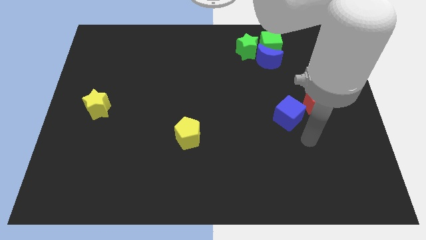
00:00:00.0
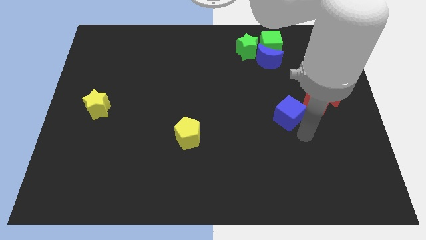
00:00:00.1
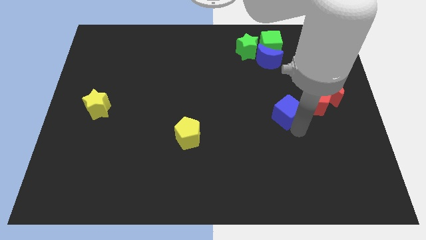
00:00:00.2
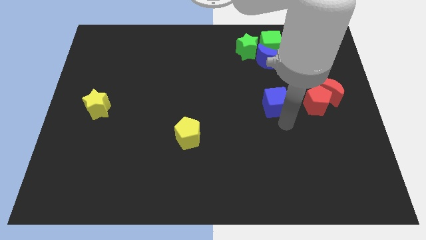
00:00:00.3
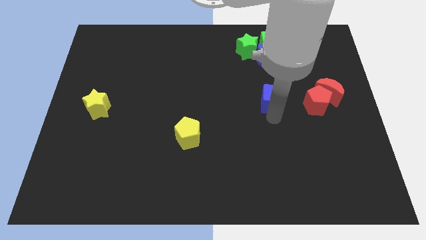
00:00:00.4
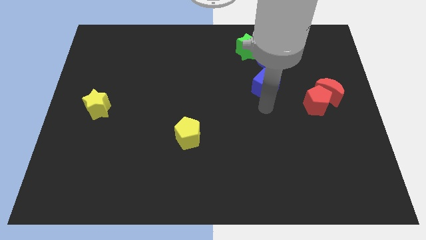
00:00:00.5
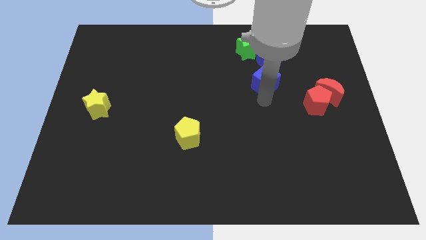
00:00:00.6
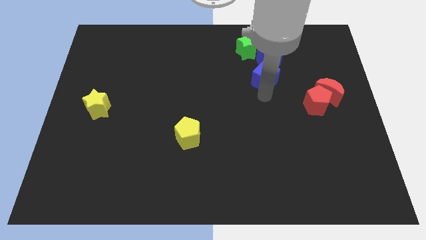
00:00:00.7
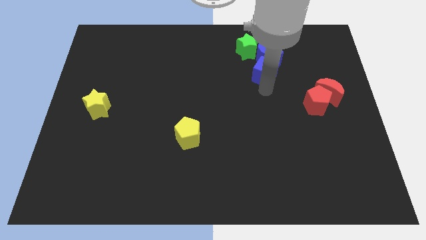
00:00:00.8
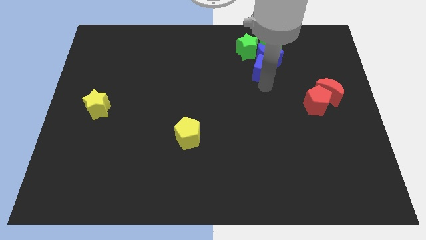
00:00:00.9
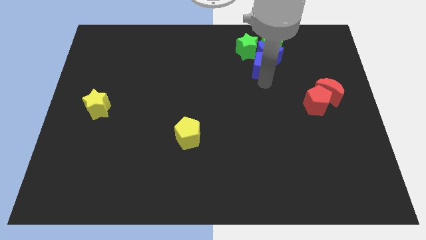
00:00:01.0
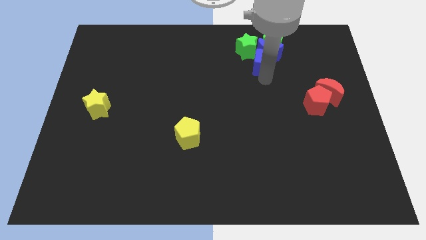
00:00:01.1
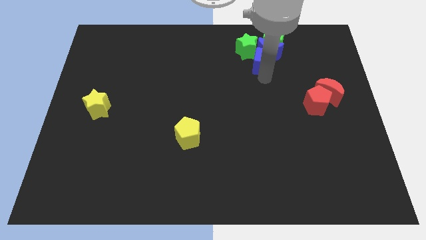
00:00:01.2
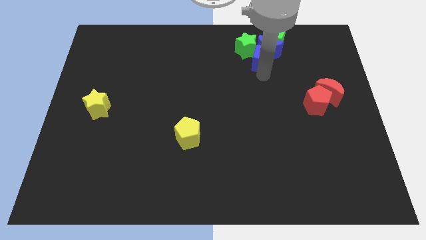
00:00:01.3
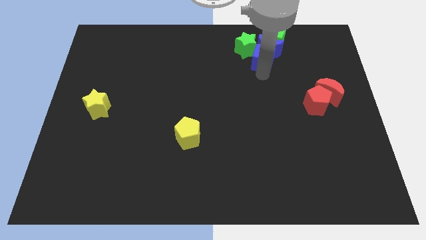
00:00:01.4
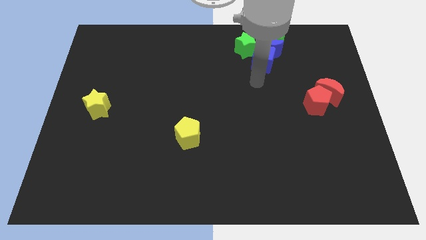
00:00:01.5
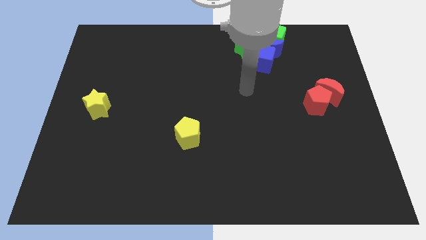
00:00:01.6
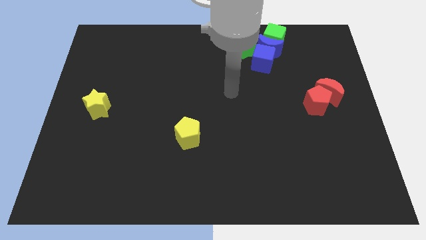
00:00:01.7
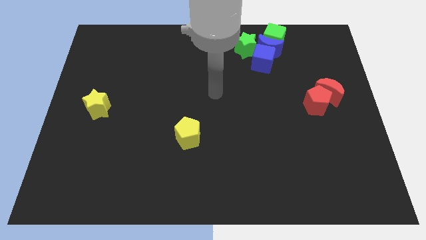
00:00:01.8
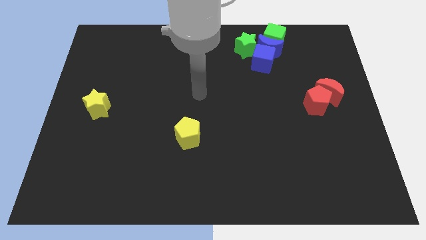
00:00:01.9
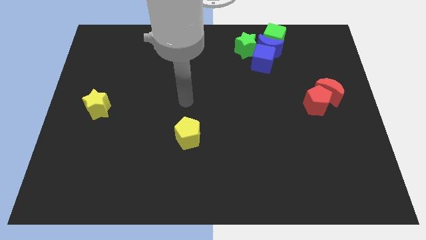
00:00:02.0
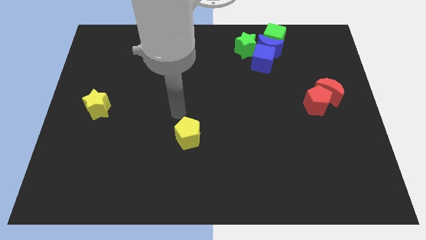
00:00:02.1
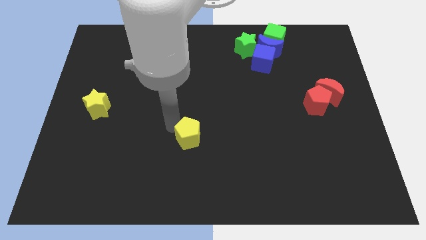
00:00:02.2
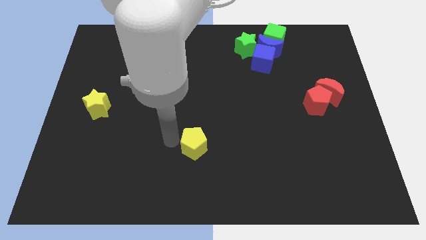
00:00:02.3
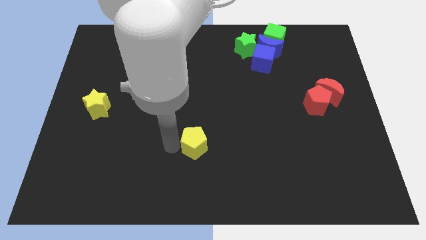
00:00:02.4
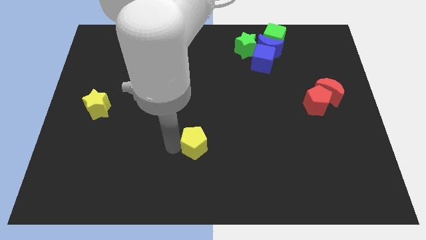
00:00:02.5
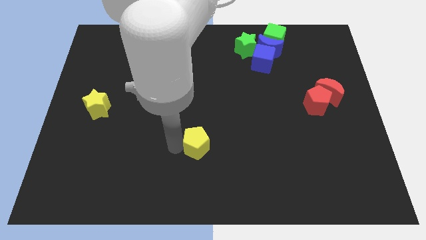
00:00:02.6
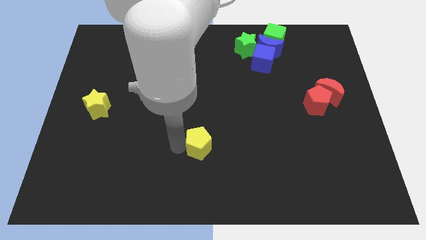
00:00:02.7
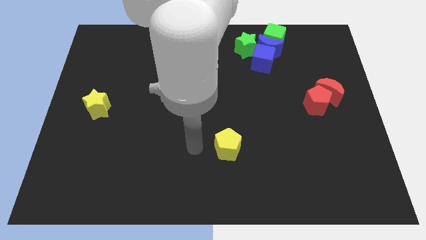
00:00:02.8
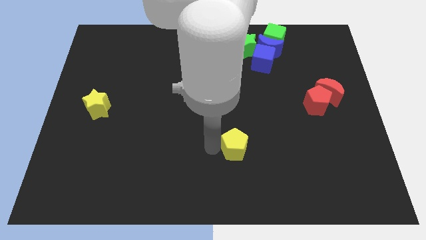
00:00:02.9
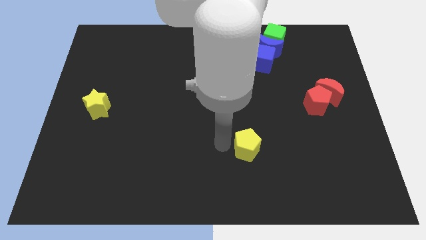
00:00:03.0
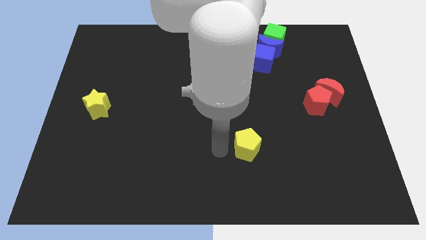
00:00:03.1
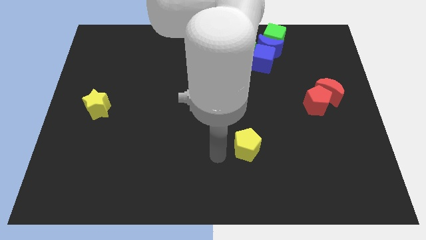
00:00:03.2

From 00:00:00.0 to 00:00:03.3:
move the yellow pentagon slightly to the right

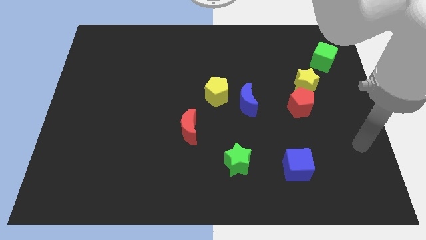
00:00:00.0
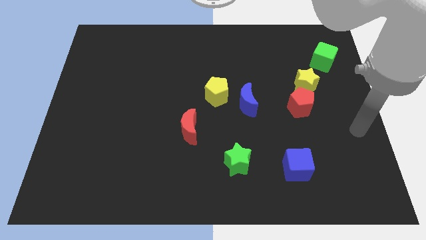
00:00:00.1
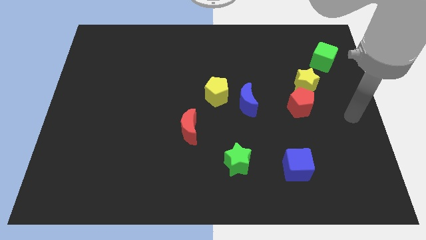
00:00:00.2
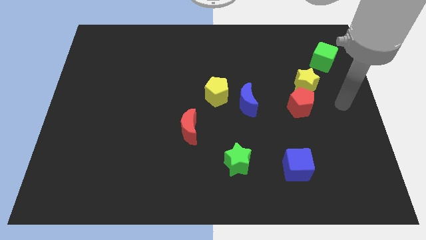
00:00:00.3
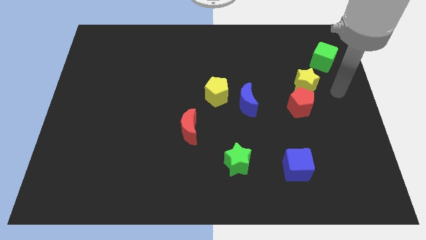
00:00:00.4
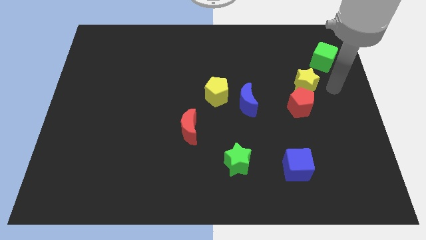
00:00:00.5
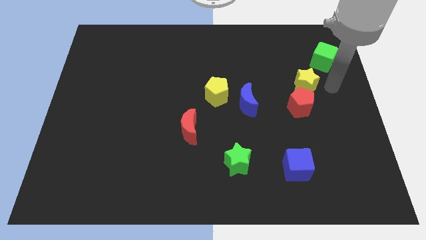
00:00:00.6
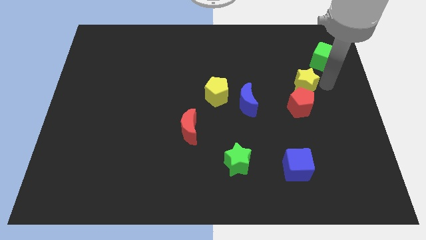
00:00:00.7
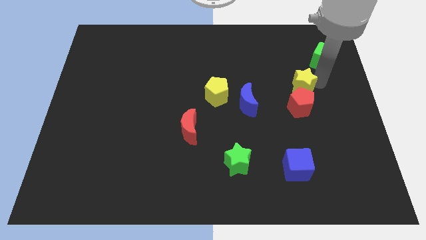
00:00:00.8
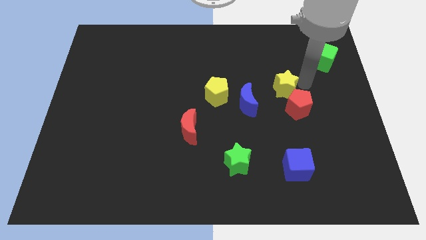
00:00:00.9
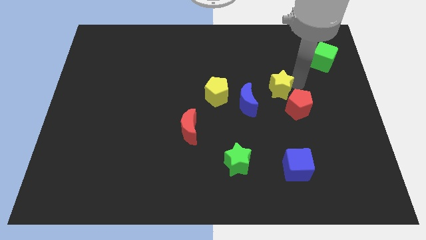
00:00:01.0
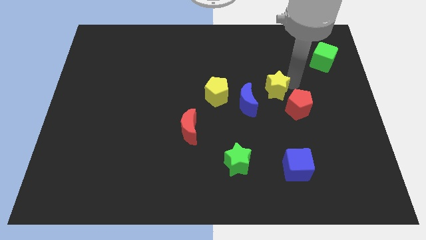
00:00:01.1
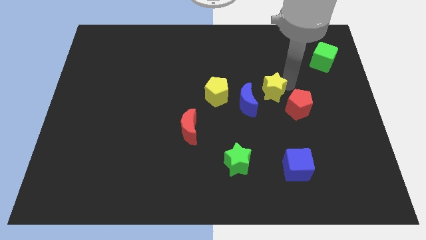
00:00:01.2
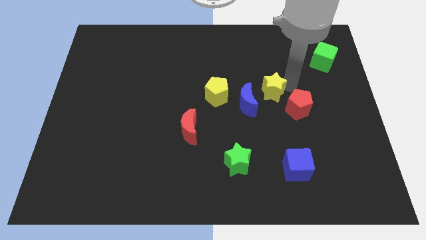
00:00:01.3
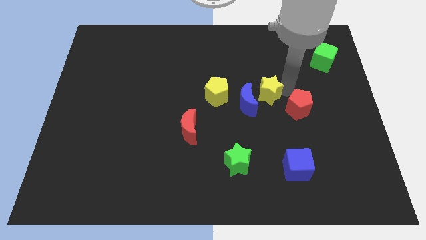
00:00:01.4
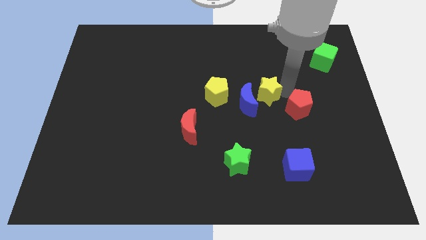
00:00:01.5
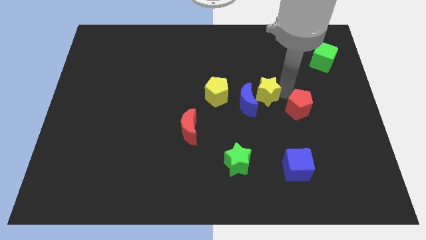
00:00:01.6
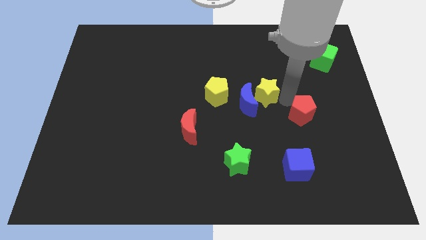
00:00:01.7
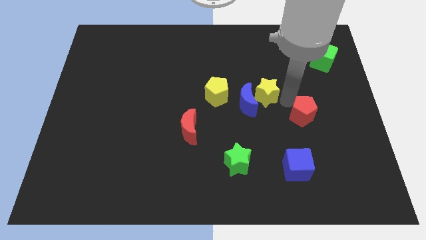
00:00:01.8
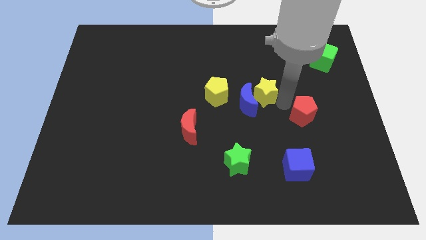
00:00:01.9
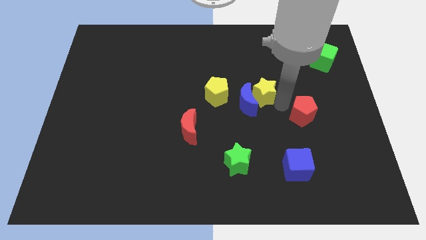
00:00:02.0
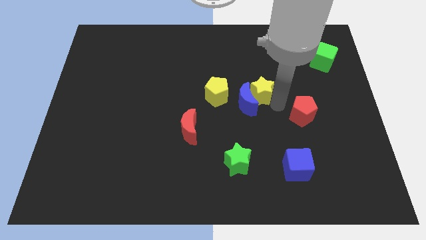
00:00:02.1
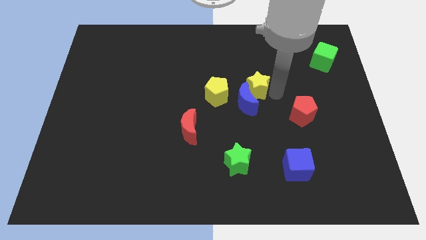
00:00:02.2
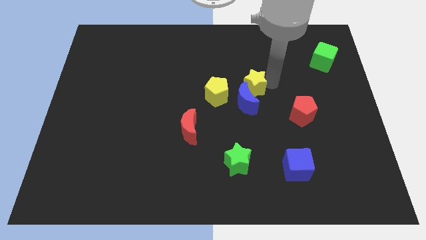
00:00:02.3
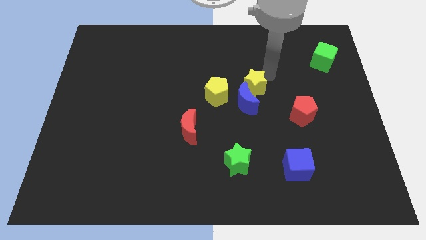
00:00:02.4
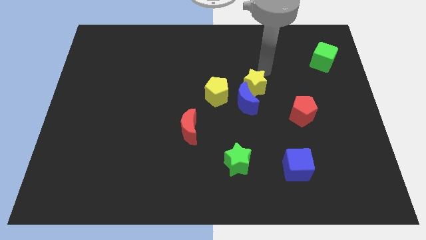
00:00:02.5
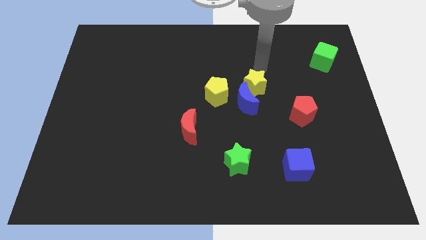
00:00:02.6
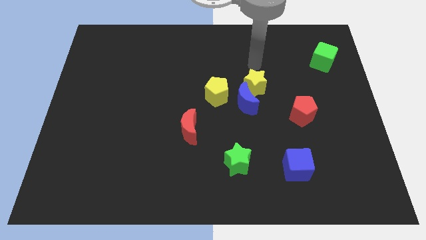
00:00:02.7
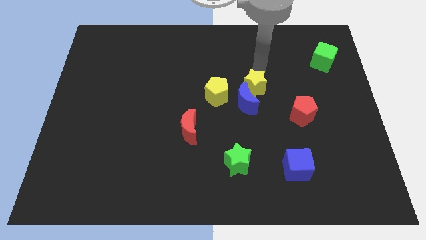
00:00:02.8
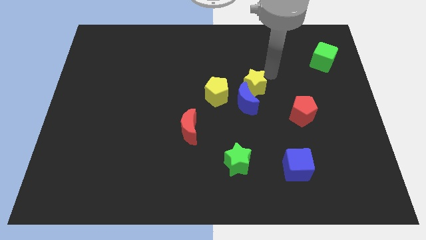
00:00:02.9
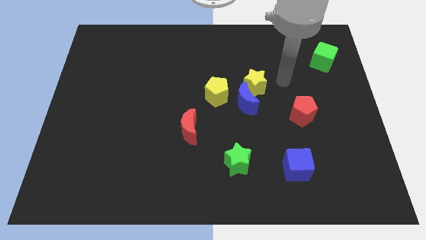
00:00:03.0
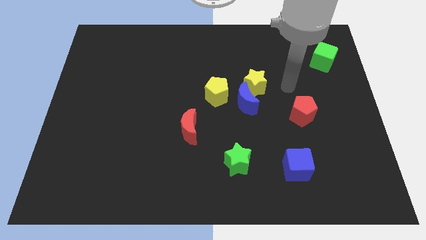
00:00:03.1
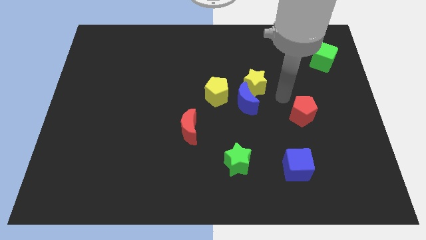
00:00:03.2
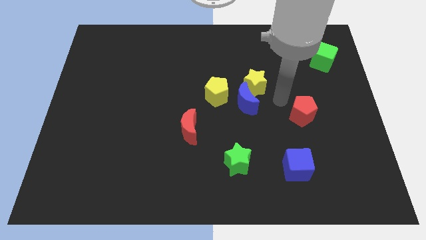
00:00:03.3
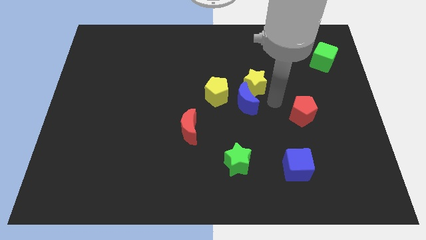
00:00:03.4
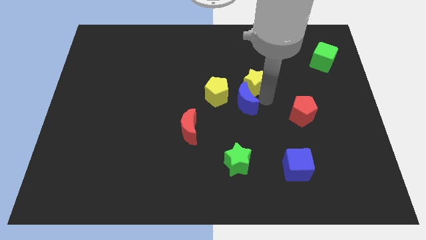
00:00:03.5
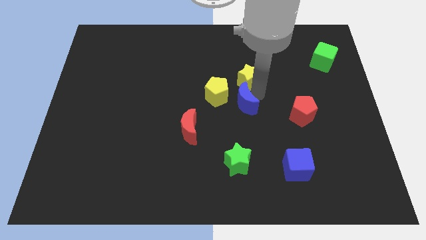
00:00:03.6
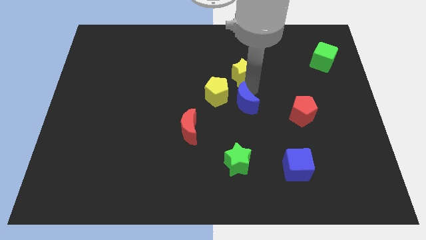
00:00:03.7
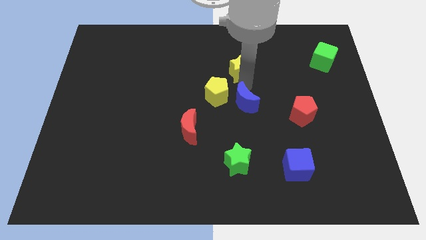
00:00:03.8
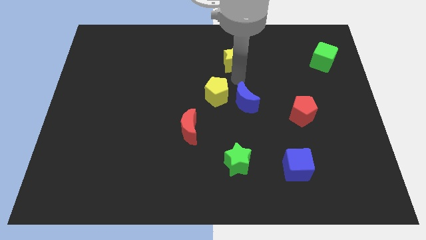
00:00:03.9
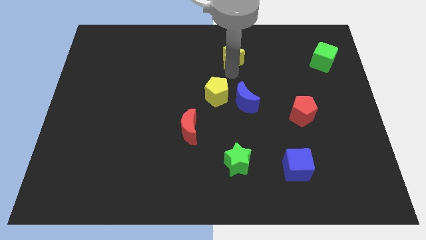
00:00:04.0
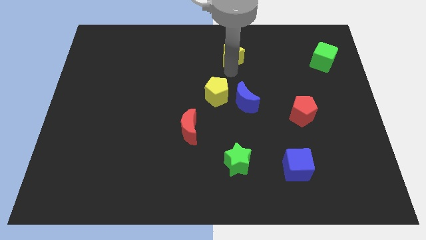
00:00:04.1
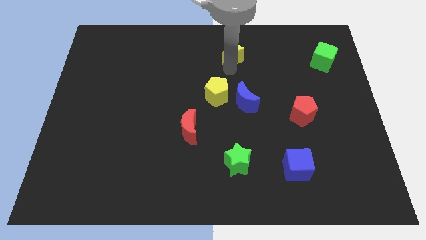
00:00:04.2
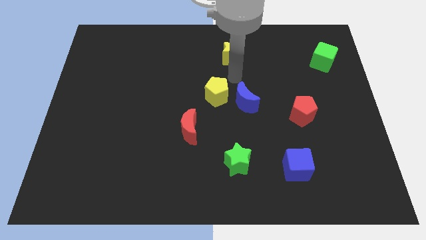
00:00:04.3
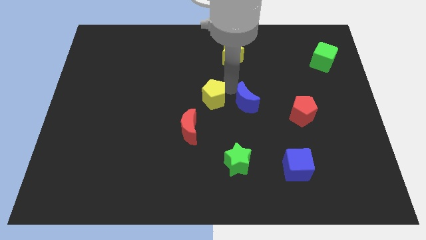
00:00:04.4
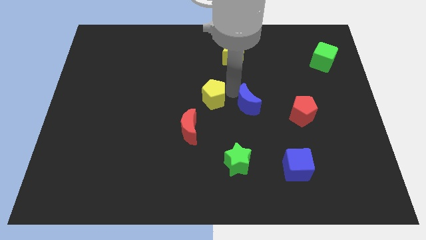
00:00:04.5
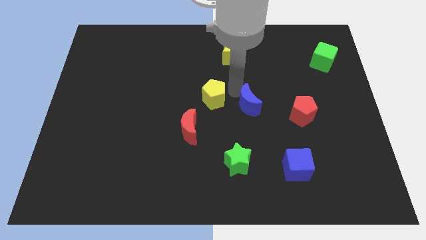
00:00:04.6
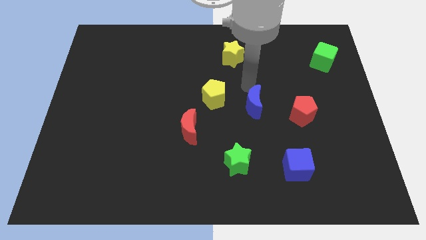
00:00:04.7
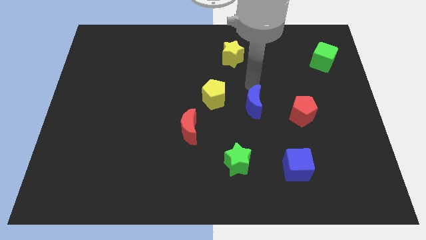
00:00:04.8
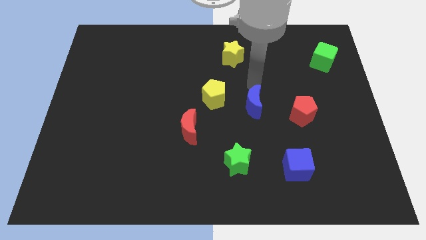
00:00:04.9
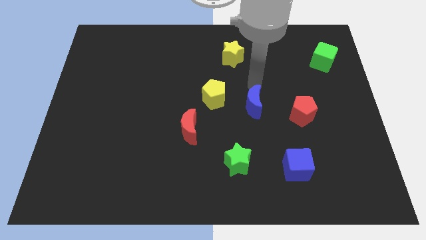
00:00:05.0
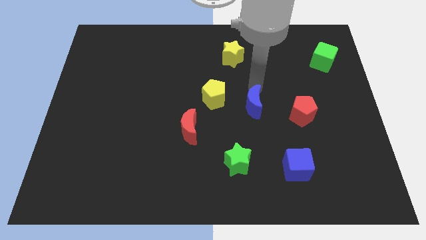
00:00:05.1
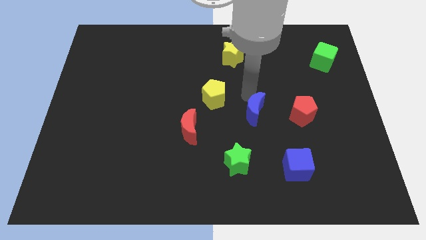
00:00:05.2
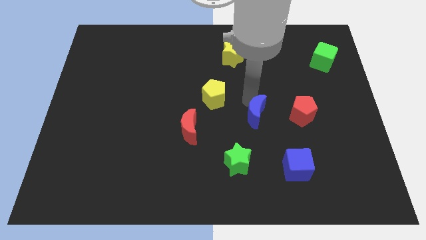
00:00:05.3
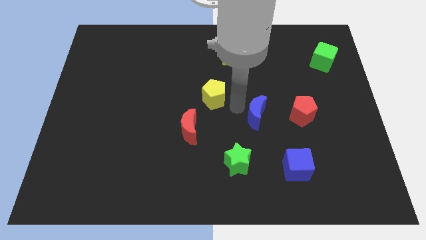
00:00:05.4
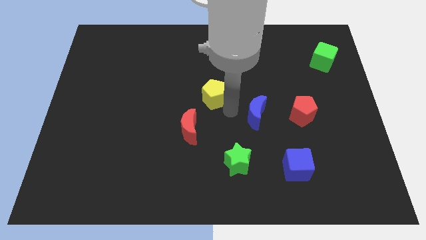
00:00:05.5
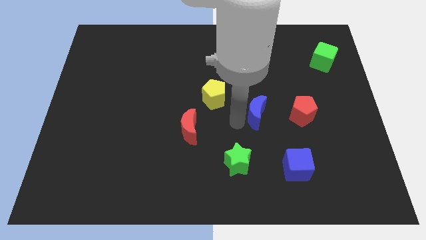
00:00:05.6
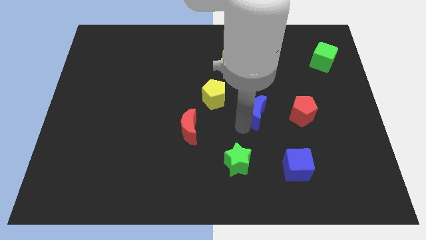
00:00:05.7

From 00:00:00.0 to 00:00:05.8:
move the yellow star towards the top center of the board
